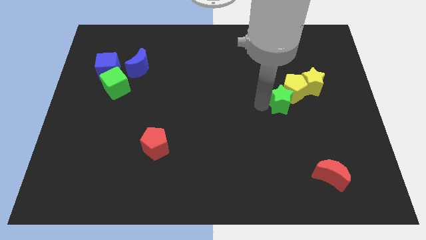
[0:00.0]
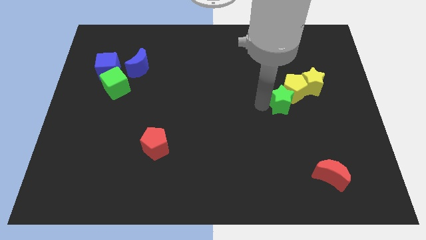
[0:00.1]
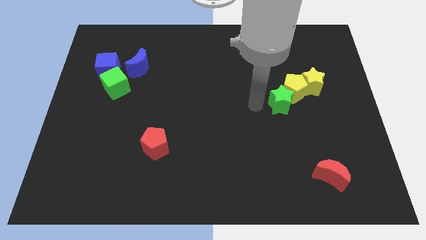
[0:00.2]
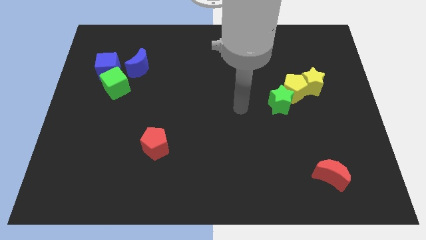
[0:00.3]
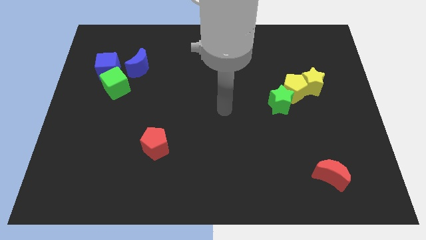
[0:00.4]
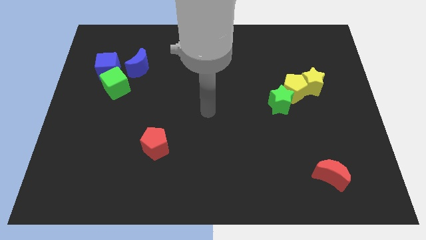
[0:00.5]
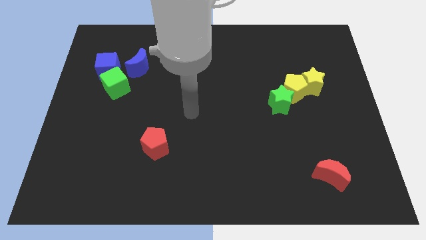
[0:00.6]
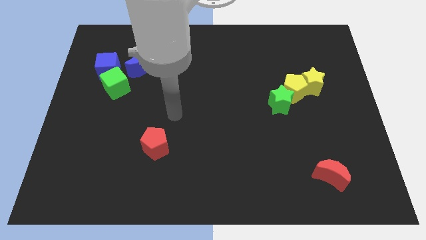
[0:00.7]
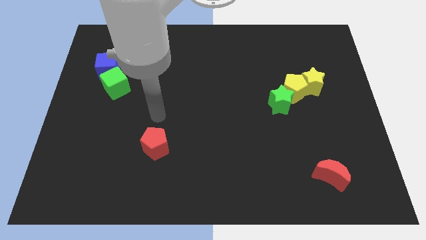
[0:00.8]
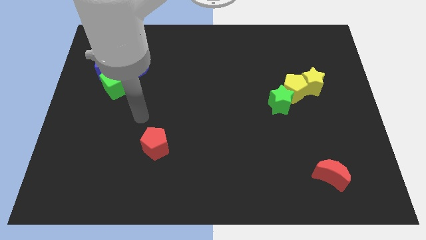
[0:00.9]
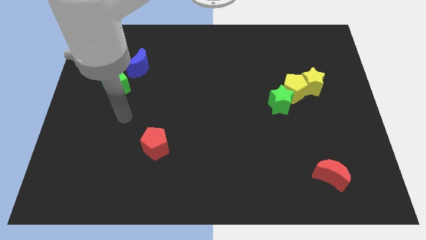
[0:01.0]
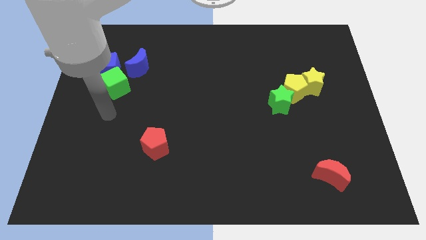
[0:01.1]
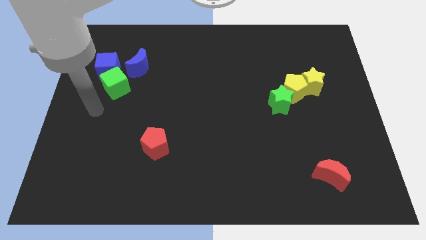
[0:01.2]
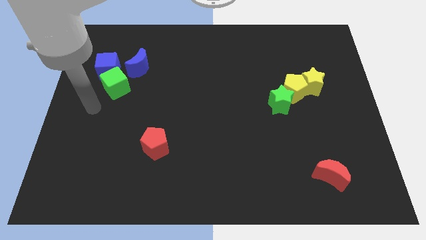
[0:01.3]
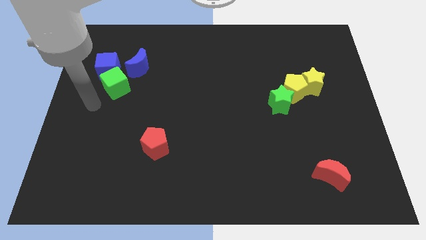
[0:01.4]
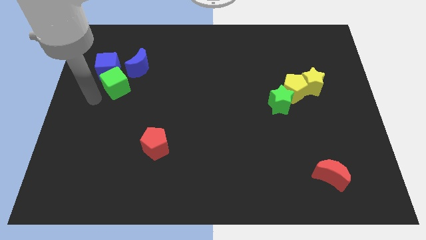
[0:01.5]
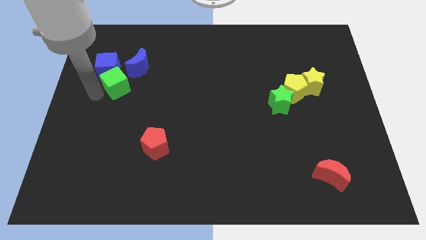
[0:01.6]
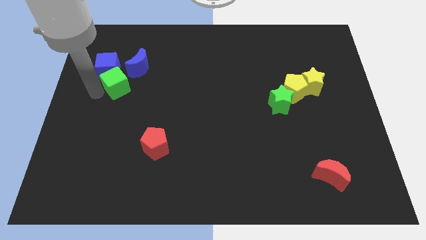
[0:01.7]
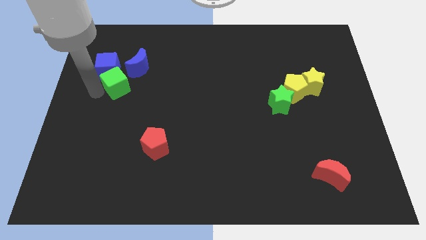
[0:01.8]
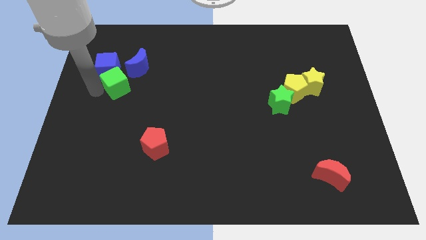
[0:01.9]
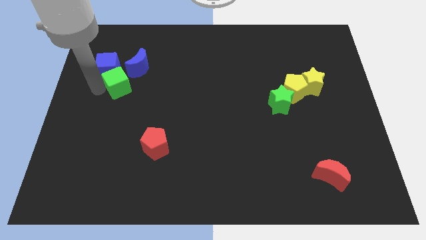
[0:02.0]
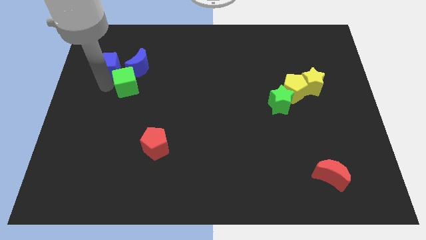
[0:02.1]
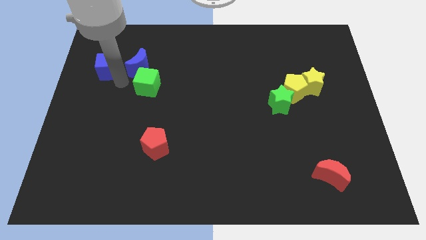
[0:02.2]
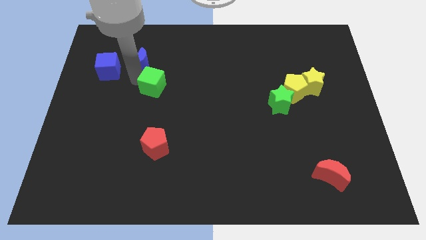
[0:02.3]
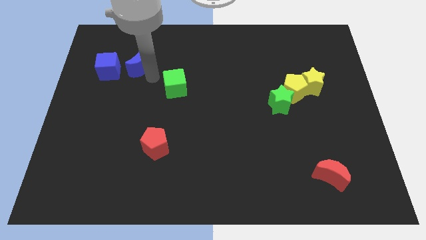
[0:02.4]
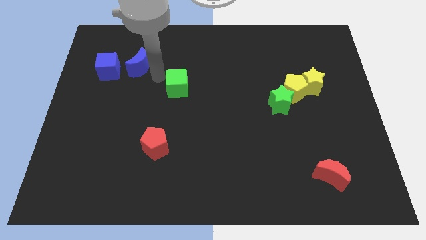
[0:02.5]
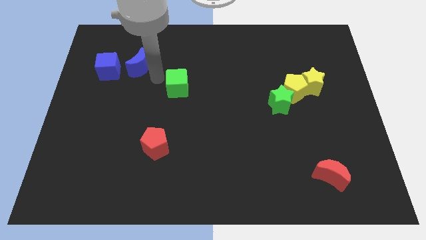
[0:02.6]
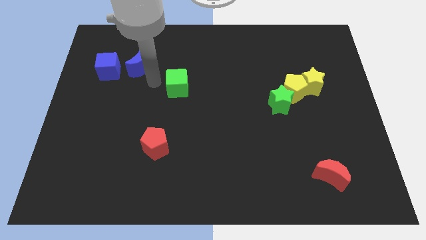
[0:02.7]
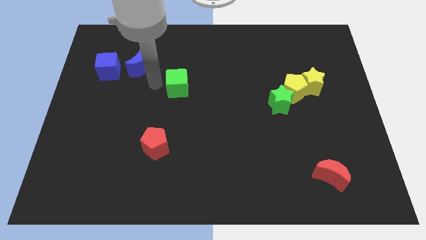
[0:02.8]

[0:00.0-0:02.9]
slightly move the green cube towards the right

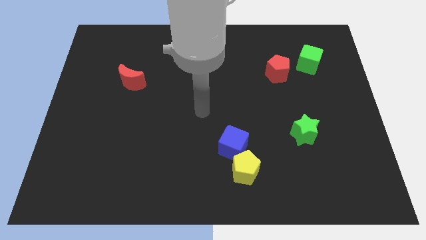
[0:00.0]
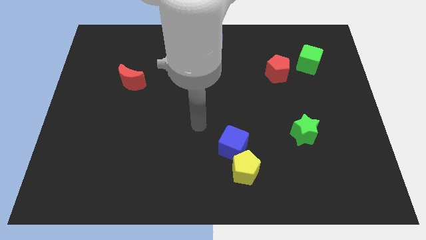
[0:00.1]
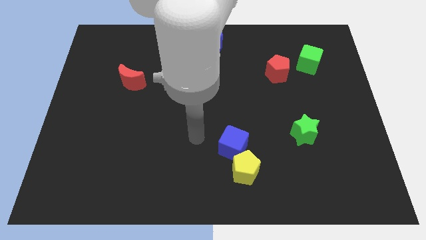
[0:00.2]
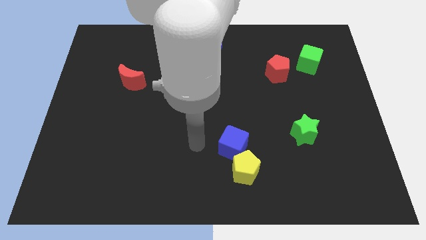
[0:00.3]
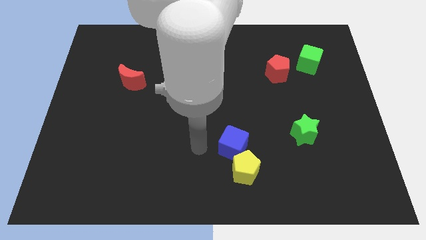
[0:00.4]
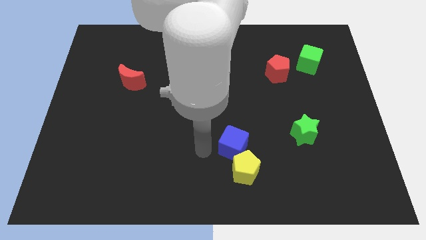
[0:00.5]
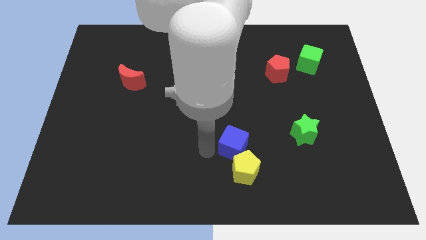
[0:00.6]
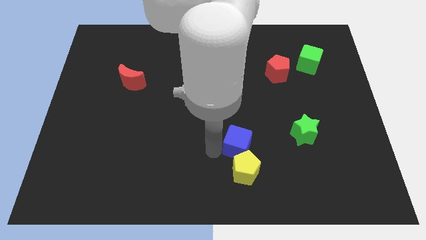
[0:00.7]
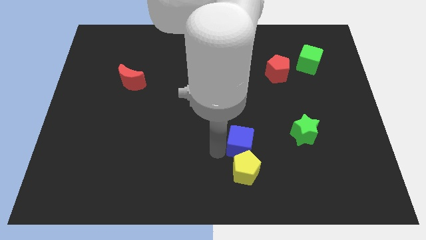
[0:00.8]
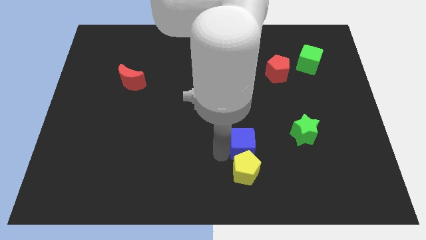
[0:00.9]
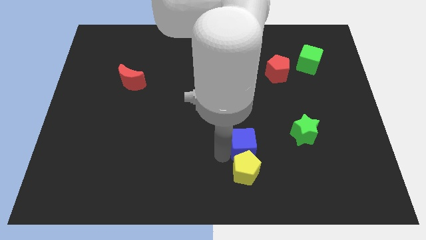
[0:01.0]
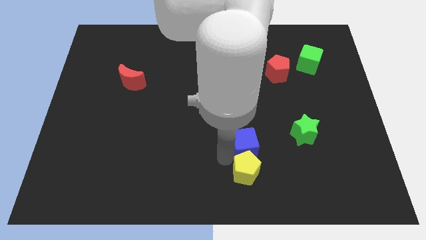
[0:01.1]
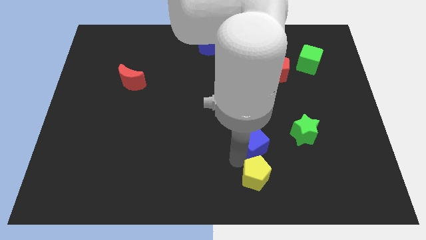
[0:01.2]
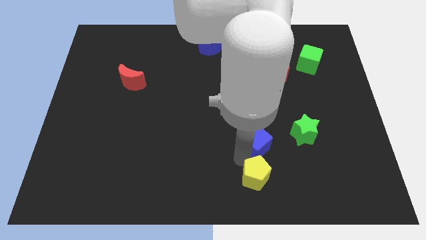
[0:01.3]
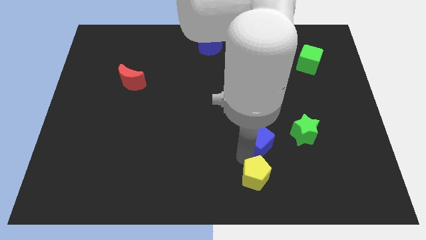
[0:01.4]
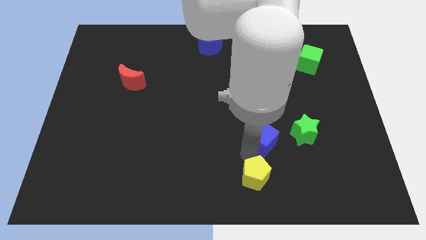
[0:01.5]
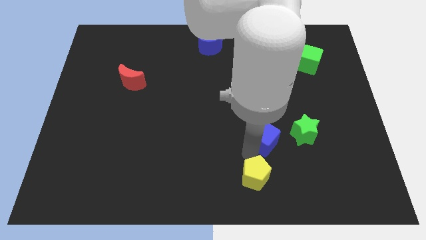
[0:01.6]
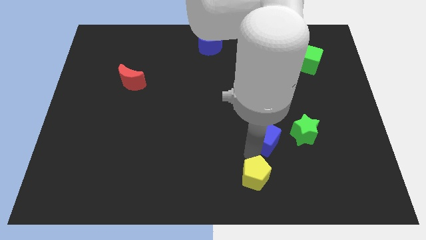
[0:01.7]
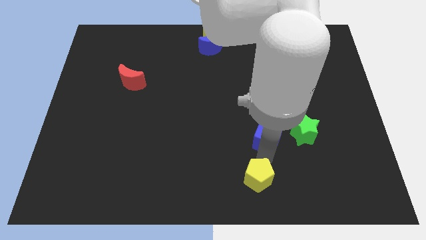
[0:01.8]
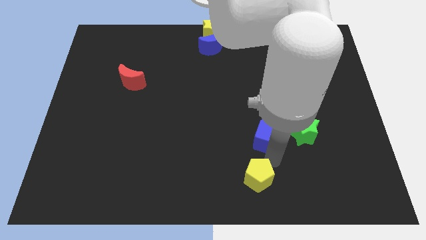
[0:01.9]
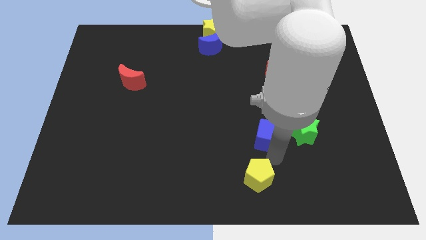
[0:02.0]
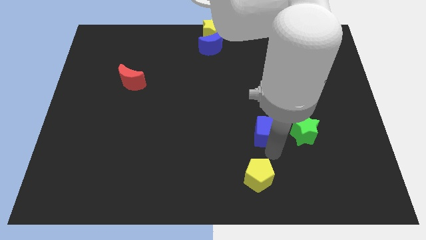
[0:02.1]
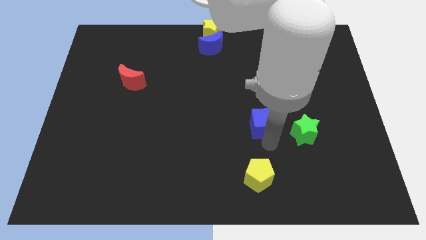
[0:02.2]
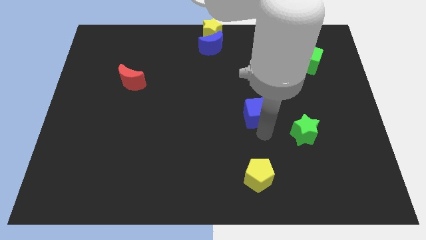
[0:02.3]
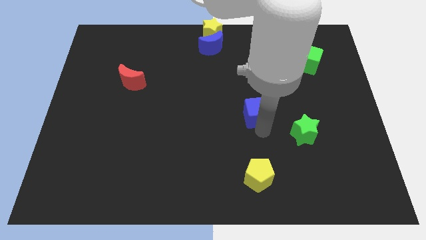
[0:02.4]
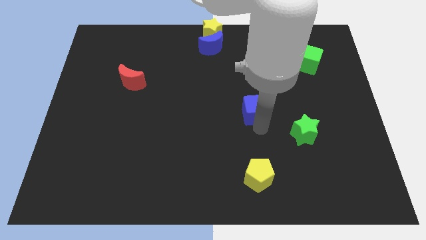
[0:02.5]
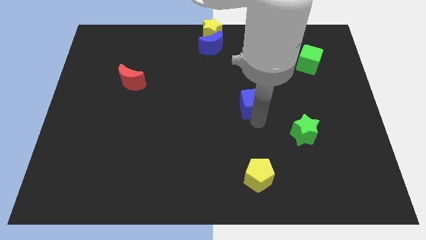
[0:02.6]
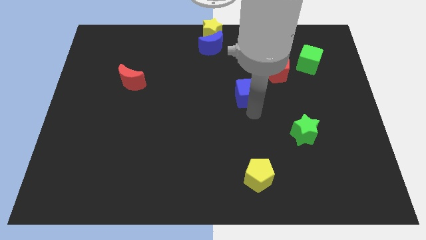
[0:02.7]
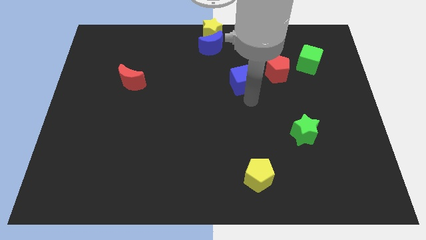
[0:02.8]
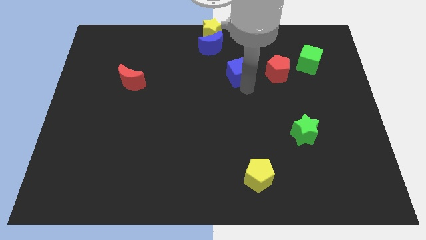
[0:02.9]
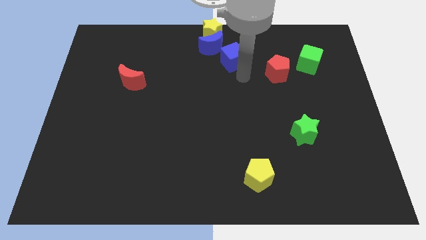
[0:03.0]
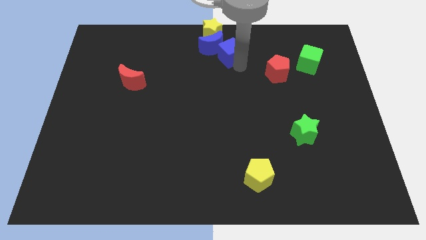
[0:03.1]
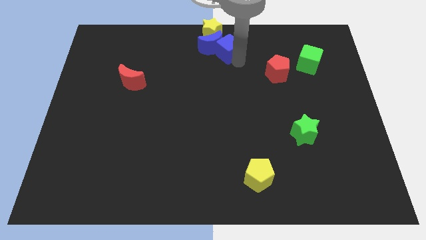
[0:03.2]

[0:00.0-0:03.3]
separate the blue moon from the yellow pentagon

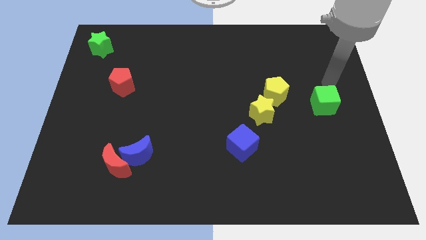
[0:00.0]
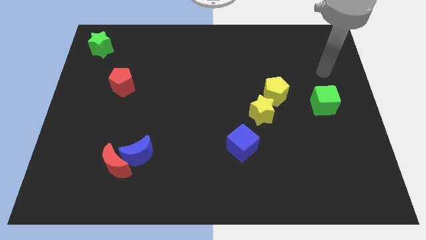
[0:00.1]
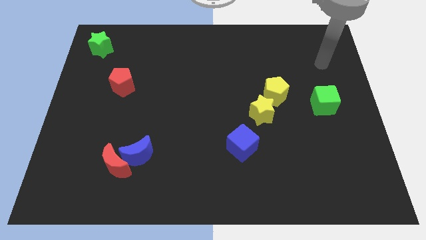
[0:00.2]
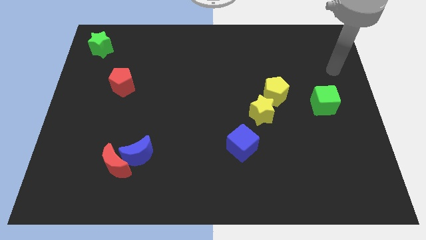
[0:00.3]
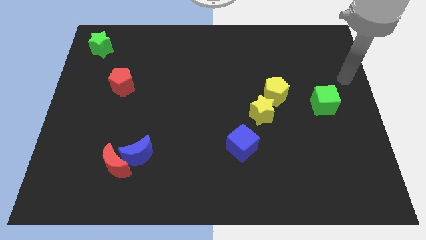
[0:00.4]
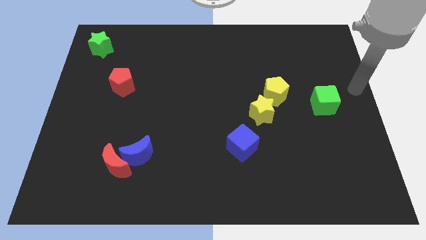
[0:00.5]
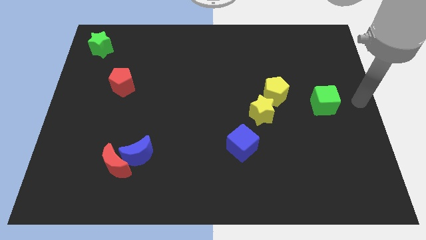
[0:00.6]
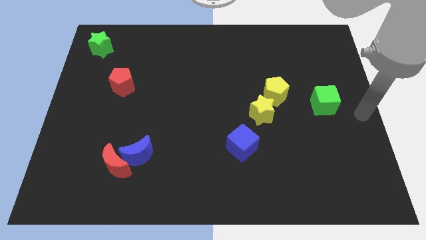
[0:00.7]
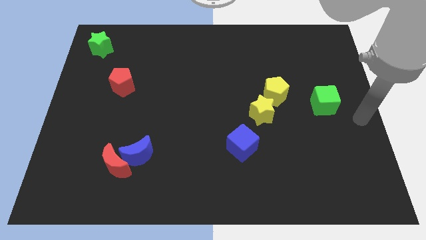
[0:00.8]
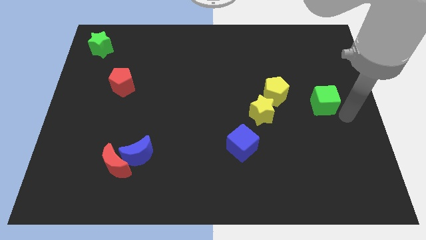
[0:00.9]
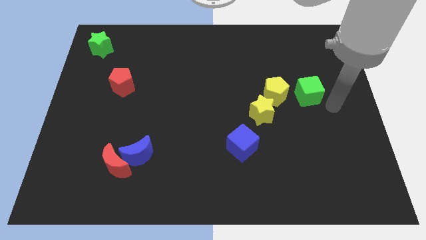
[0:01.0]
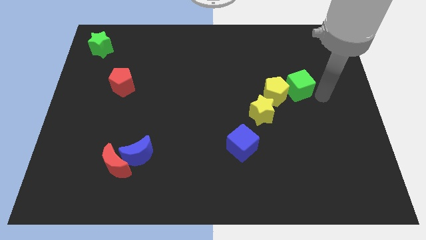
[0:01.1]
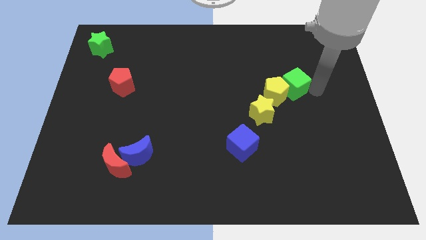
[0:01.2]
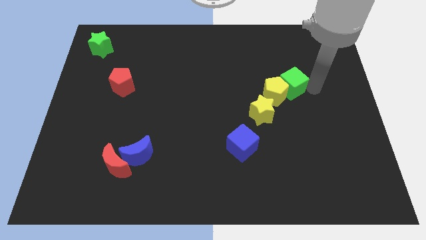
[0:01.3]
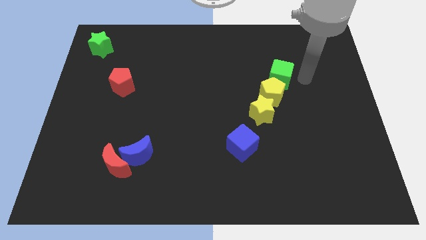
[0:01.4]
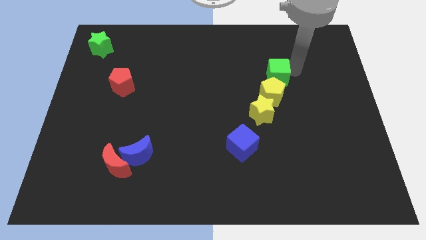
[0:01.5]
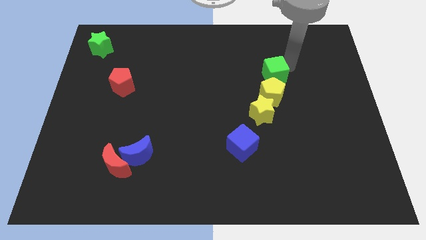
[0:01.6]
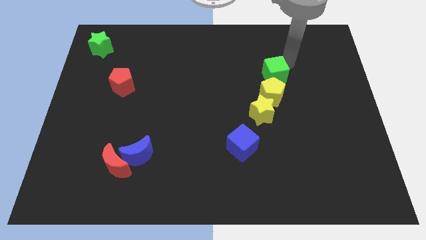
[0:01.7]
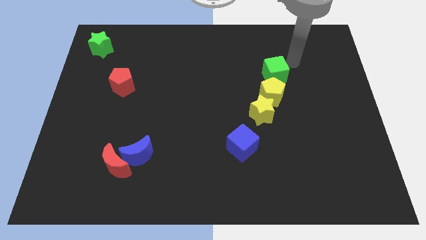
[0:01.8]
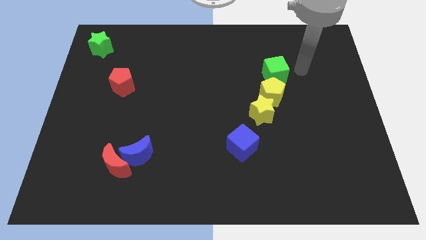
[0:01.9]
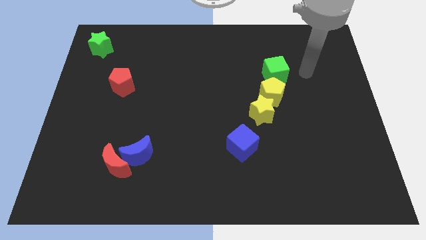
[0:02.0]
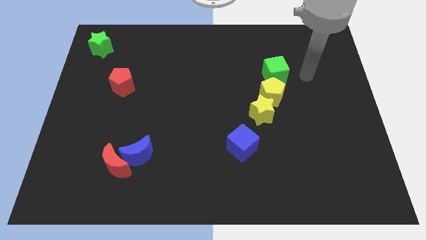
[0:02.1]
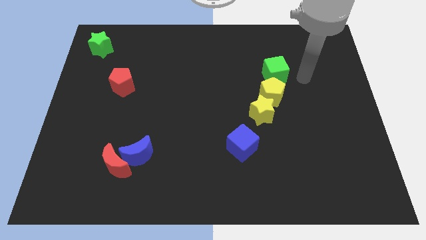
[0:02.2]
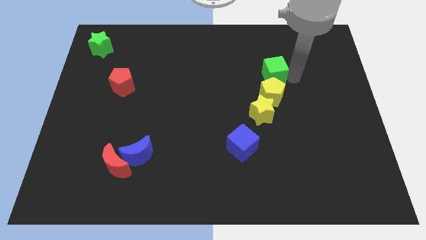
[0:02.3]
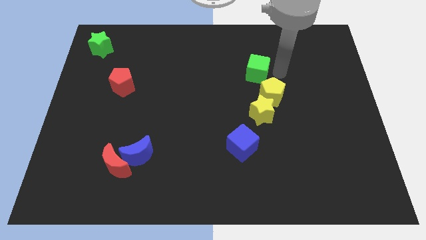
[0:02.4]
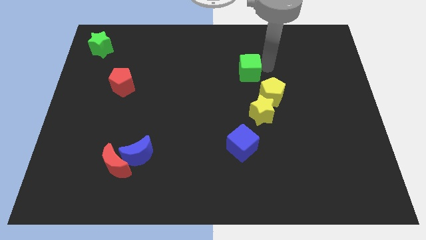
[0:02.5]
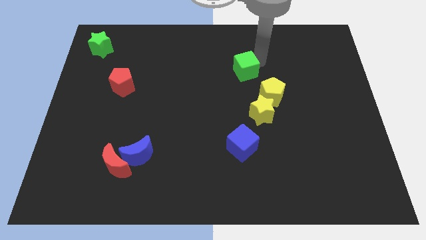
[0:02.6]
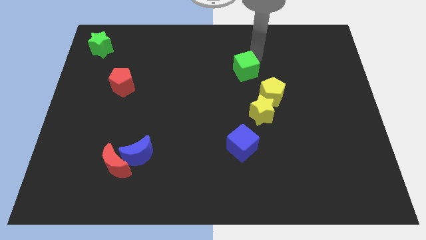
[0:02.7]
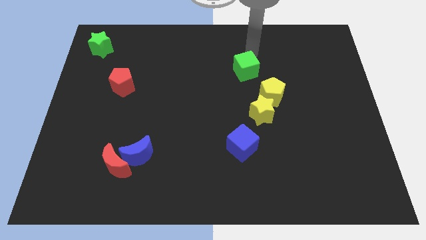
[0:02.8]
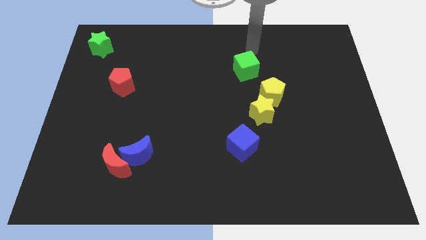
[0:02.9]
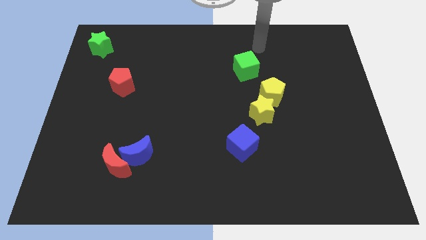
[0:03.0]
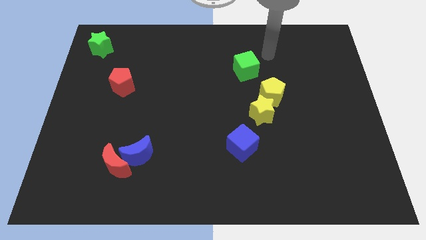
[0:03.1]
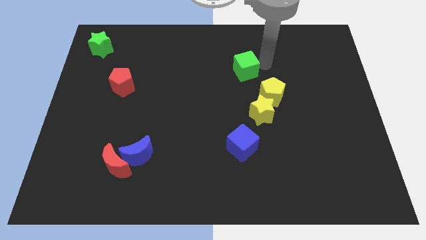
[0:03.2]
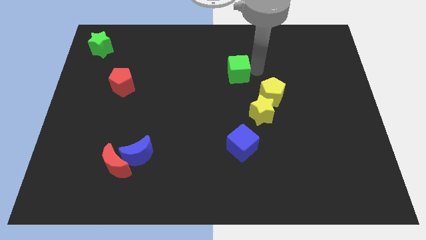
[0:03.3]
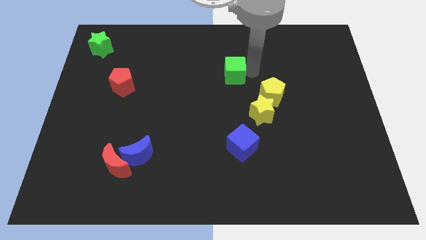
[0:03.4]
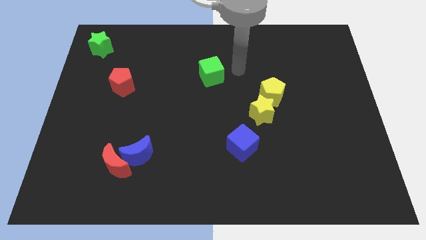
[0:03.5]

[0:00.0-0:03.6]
push the green cube towards the center of the board
